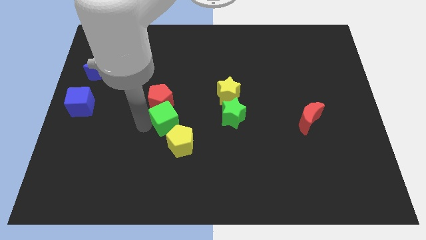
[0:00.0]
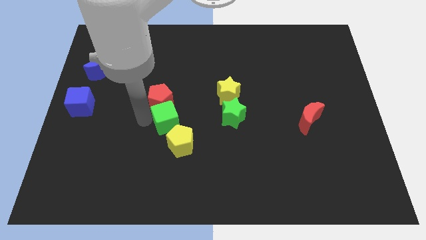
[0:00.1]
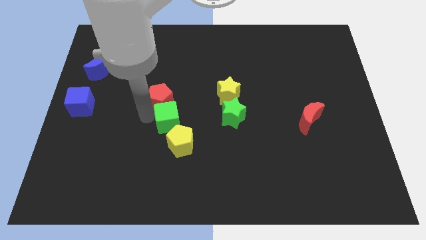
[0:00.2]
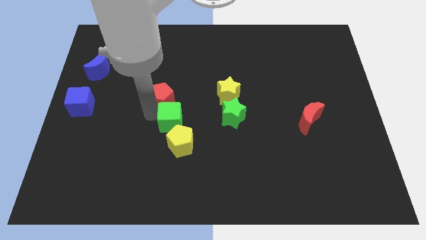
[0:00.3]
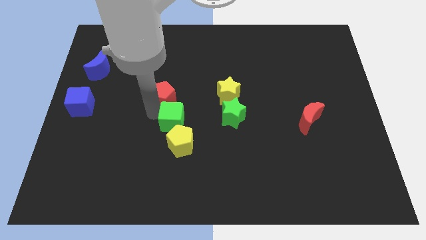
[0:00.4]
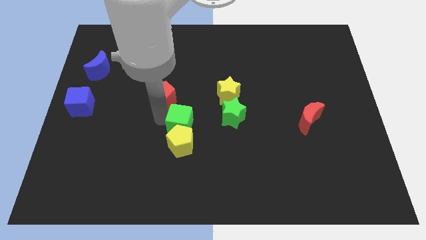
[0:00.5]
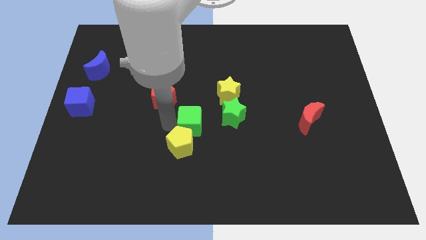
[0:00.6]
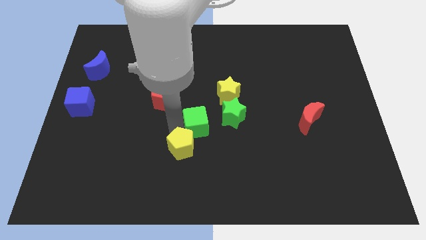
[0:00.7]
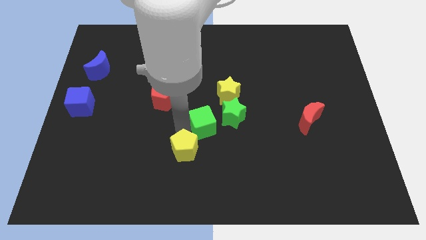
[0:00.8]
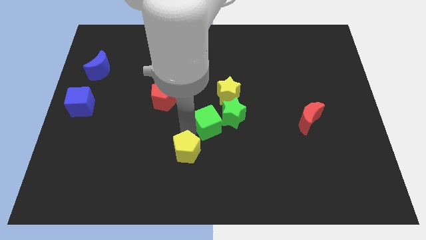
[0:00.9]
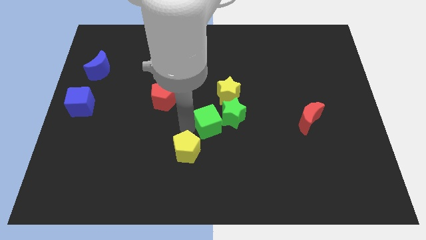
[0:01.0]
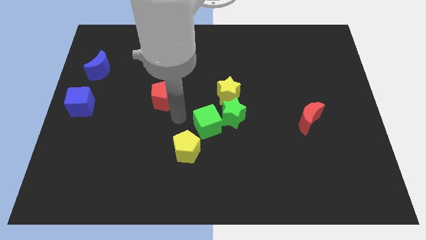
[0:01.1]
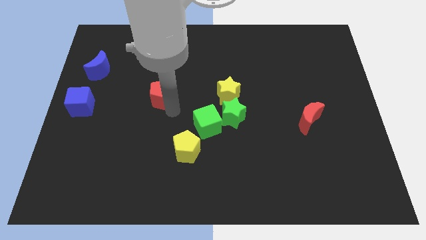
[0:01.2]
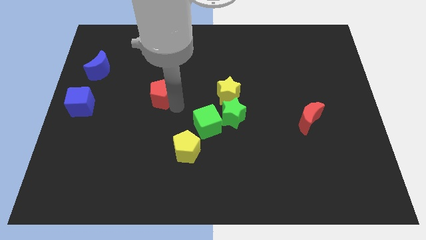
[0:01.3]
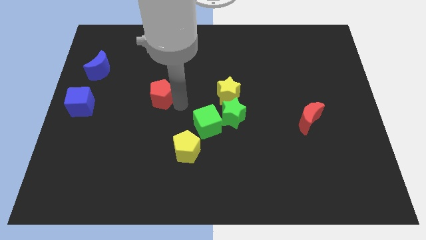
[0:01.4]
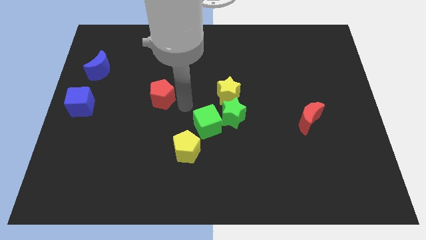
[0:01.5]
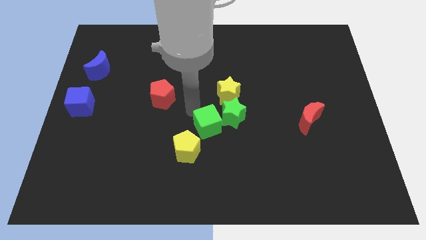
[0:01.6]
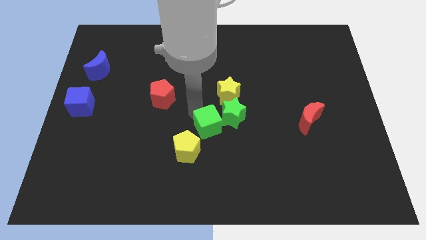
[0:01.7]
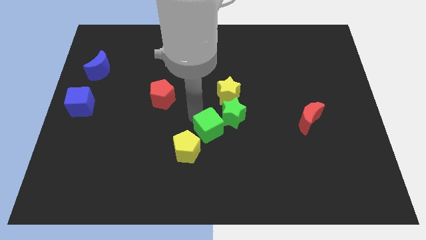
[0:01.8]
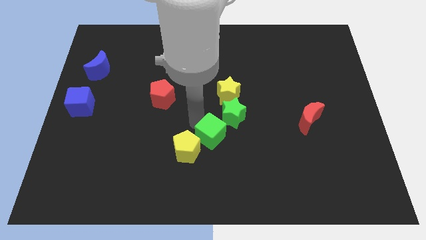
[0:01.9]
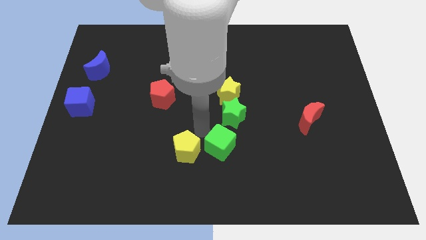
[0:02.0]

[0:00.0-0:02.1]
move the green cube in between the gren star and yellow pentagon

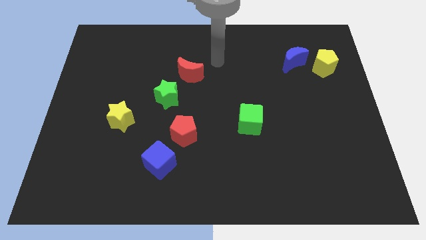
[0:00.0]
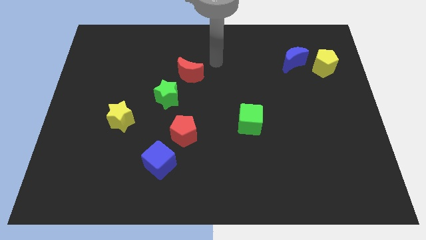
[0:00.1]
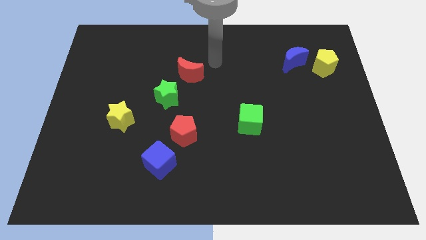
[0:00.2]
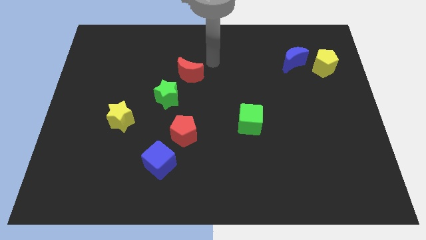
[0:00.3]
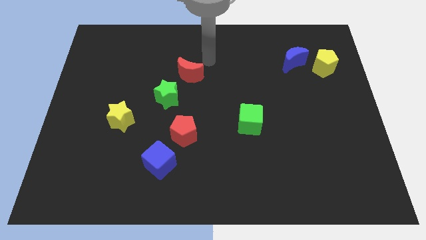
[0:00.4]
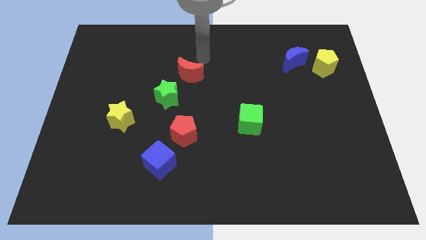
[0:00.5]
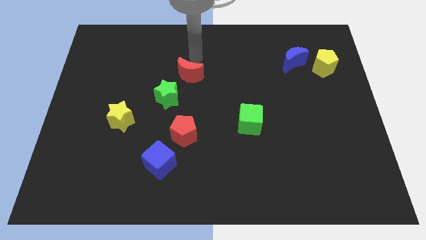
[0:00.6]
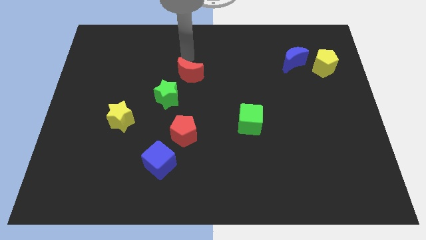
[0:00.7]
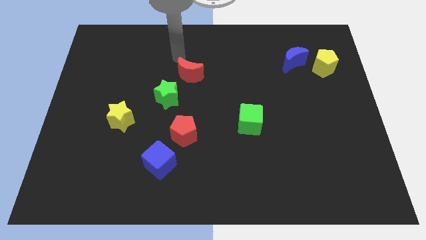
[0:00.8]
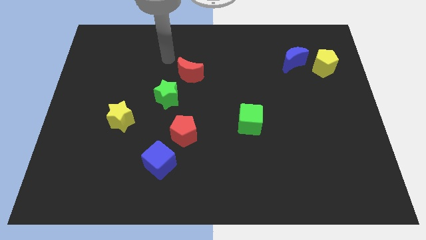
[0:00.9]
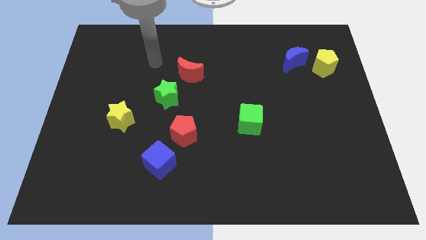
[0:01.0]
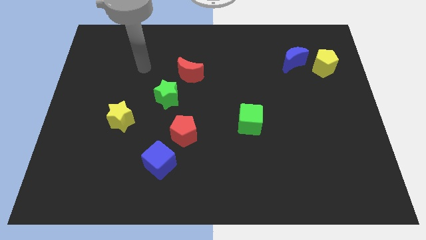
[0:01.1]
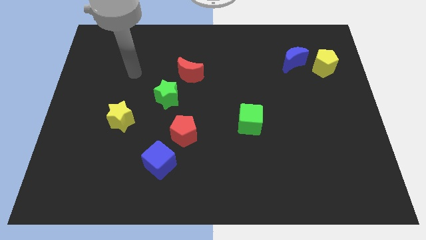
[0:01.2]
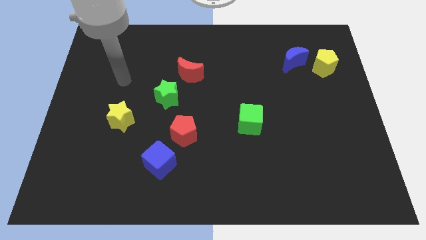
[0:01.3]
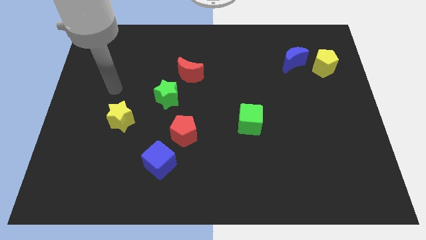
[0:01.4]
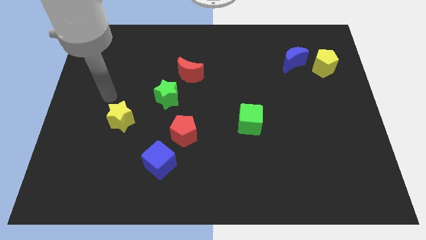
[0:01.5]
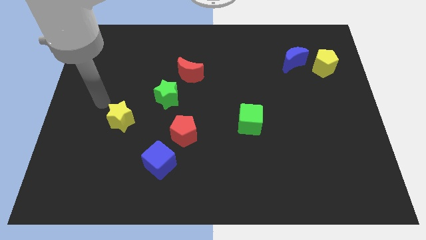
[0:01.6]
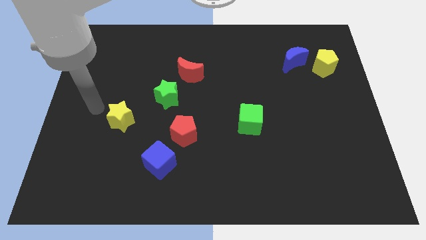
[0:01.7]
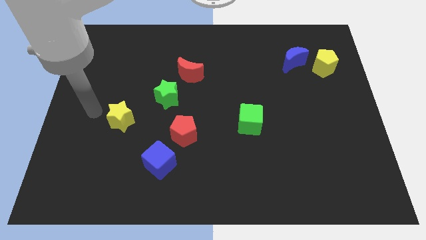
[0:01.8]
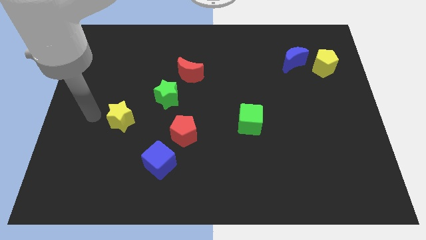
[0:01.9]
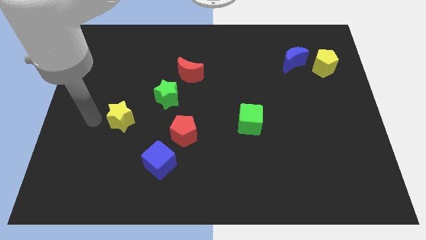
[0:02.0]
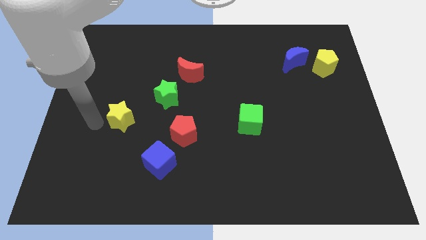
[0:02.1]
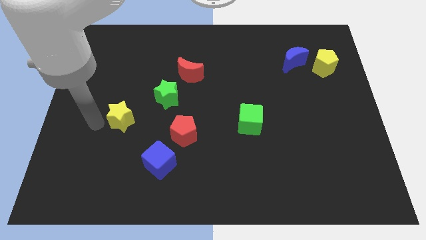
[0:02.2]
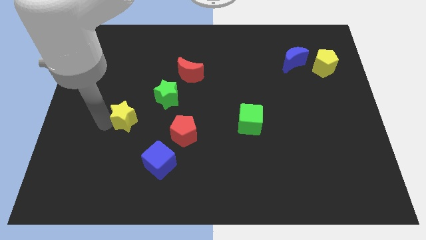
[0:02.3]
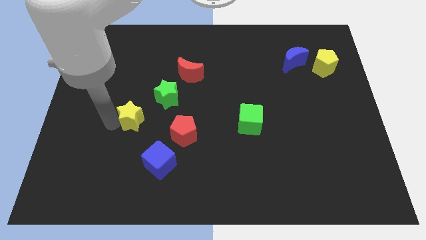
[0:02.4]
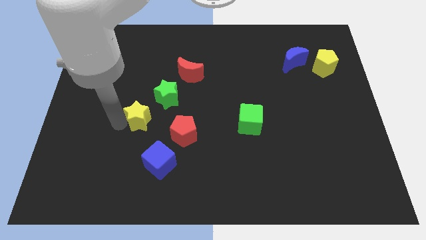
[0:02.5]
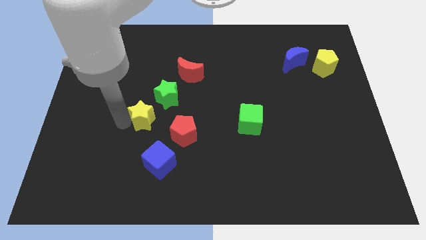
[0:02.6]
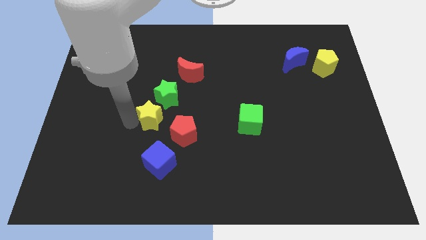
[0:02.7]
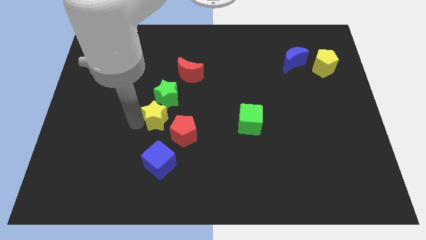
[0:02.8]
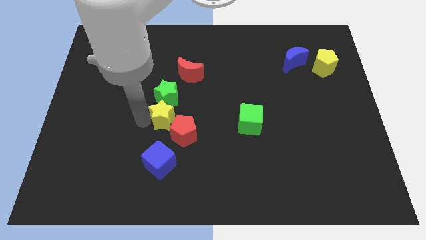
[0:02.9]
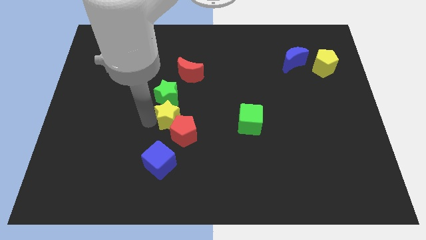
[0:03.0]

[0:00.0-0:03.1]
move yellow star in between the green star and red pentagon

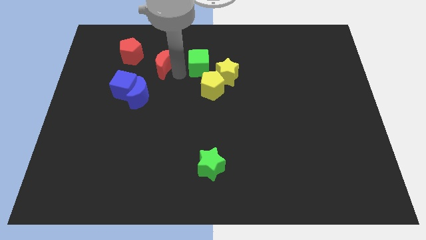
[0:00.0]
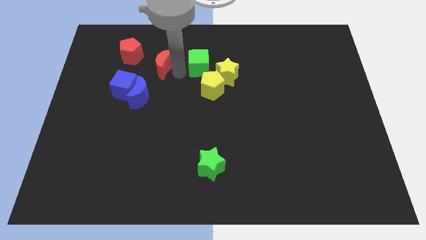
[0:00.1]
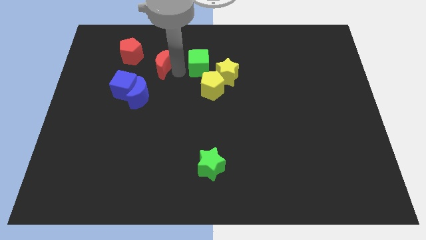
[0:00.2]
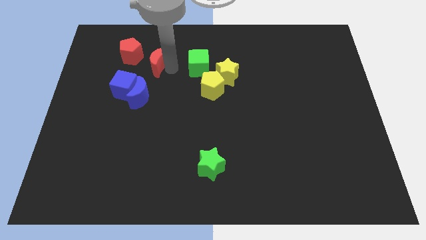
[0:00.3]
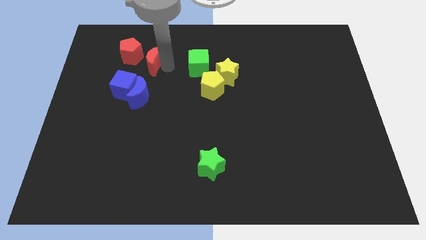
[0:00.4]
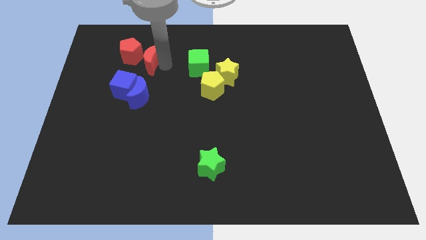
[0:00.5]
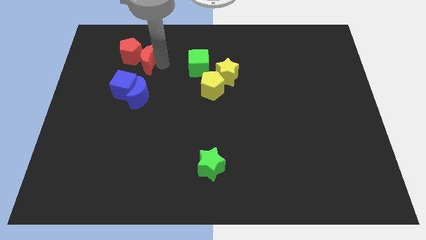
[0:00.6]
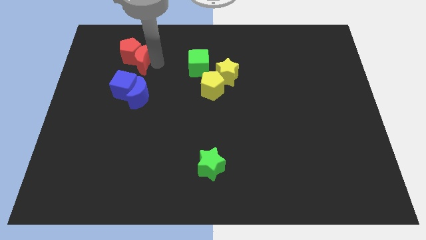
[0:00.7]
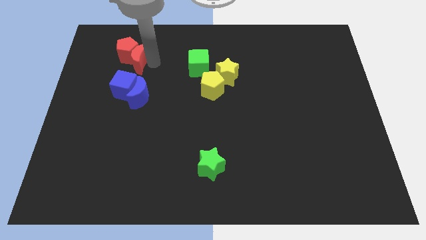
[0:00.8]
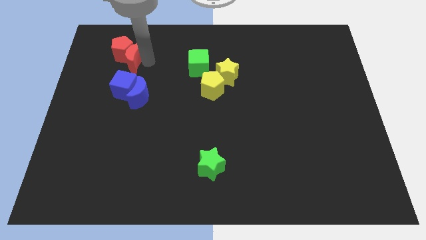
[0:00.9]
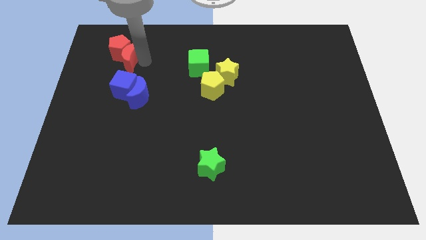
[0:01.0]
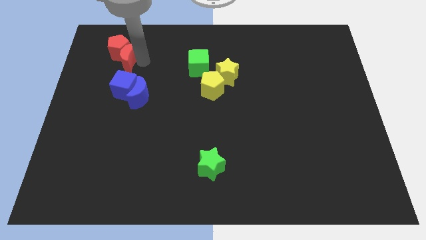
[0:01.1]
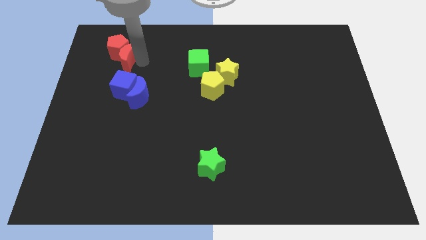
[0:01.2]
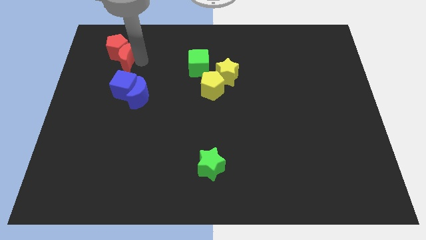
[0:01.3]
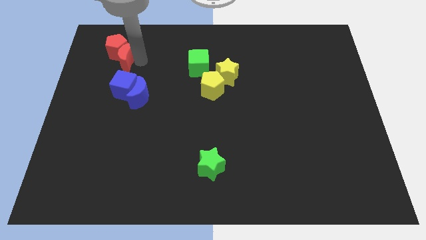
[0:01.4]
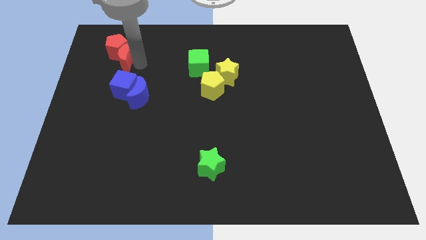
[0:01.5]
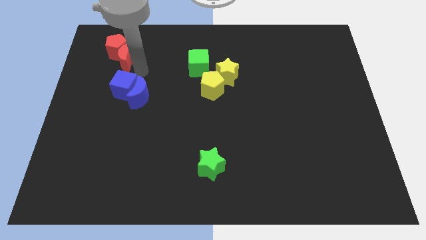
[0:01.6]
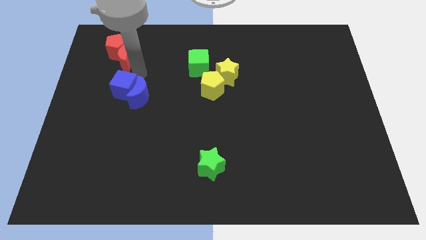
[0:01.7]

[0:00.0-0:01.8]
push the red moon into the red pentagon

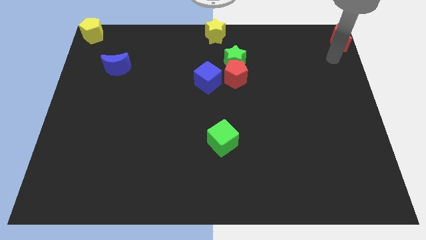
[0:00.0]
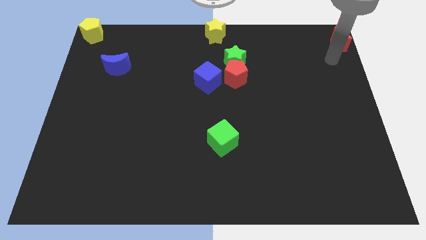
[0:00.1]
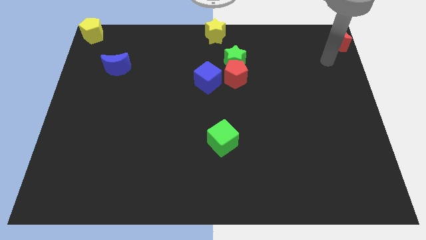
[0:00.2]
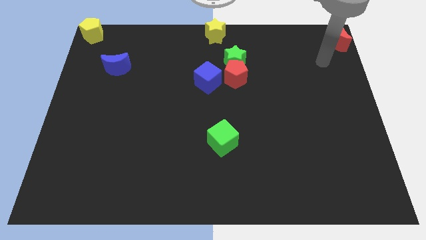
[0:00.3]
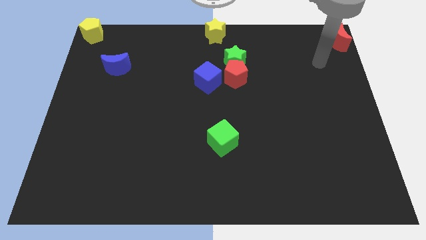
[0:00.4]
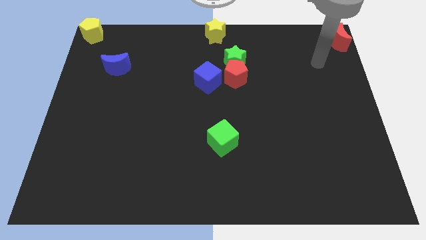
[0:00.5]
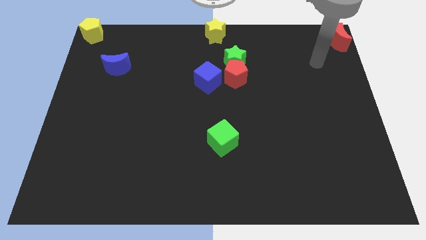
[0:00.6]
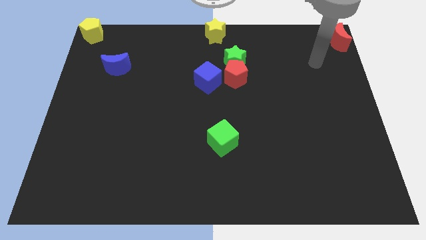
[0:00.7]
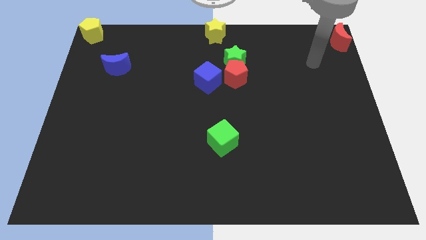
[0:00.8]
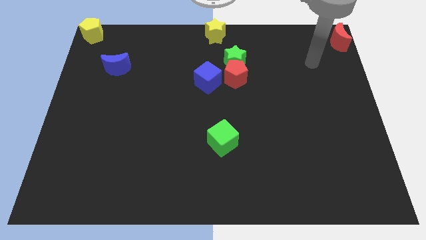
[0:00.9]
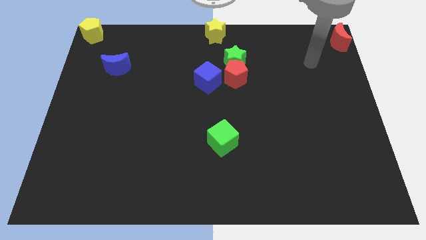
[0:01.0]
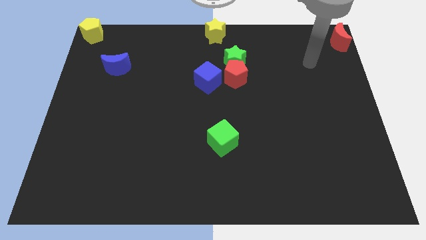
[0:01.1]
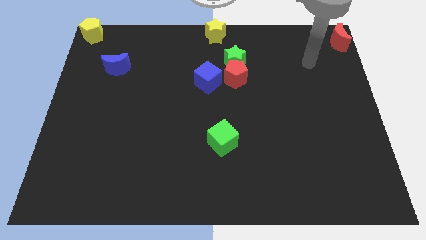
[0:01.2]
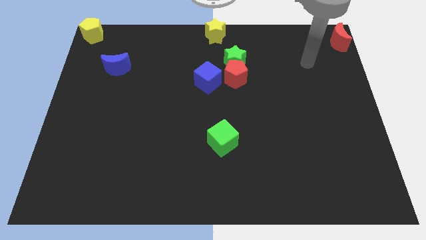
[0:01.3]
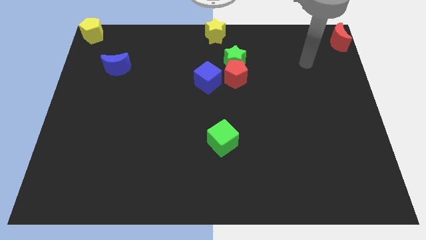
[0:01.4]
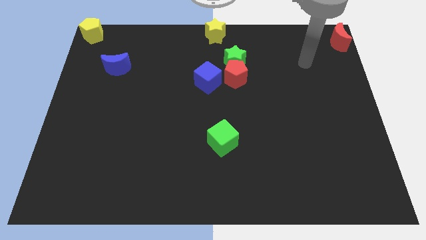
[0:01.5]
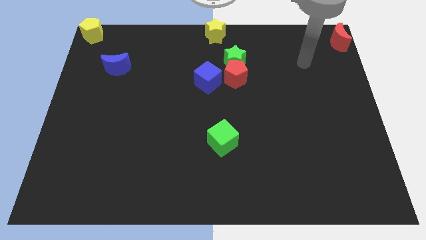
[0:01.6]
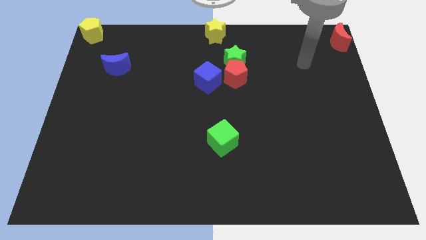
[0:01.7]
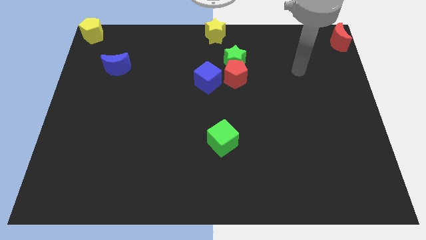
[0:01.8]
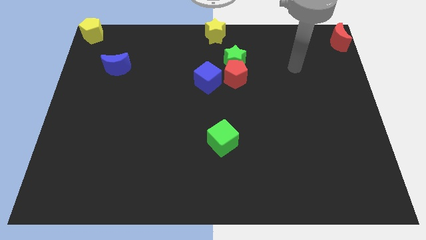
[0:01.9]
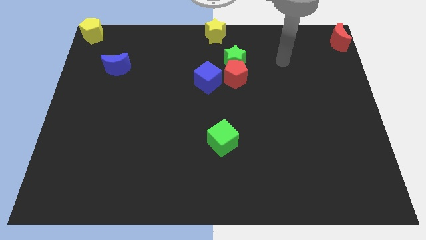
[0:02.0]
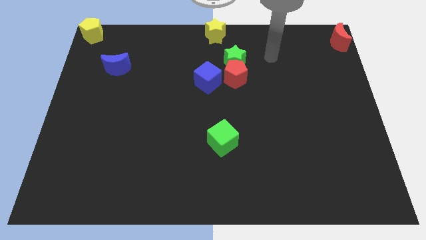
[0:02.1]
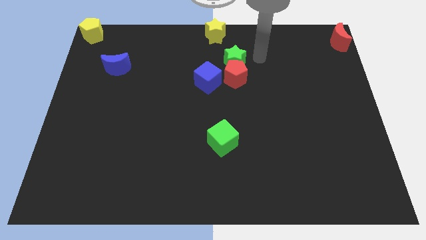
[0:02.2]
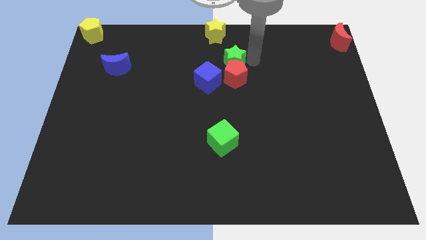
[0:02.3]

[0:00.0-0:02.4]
point your arm to the right side of green star
